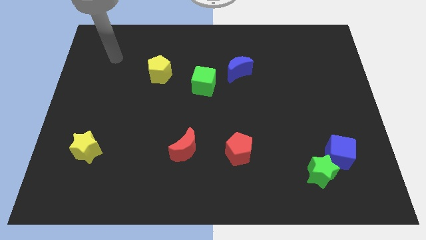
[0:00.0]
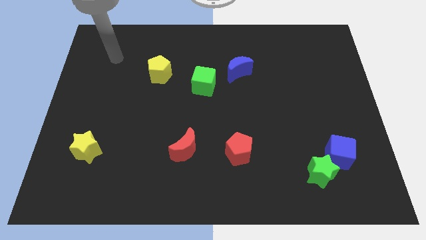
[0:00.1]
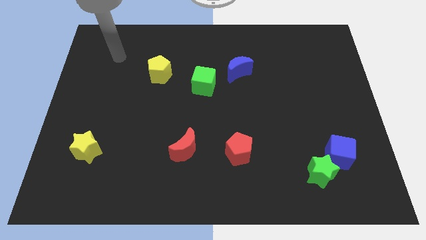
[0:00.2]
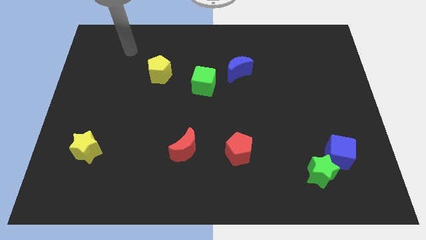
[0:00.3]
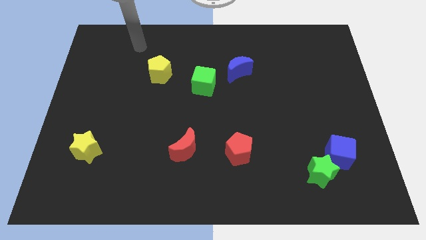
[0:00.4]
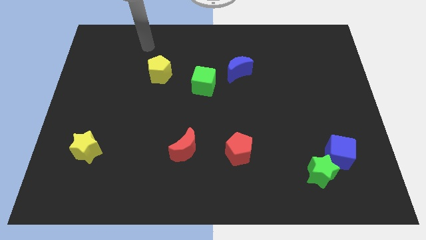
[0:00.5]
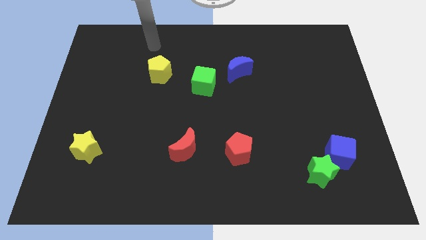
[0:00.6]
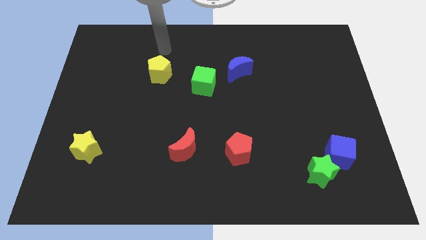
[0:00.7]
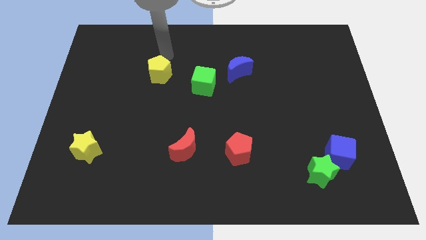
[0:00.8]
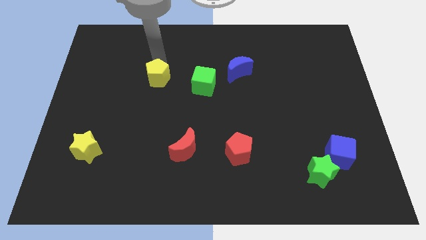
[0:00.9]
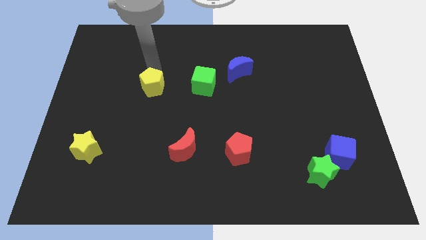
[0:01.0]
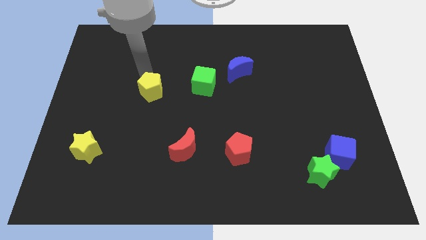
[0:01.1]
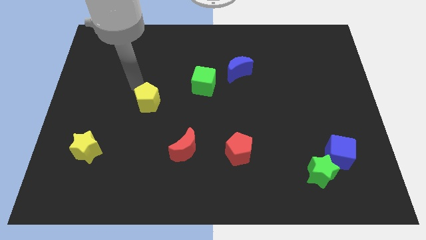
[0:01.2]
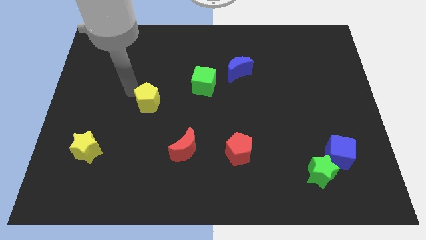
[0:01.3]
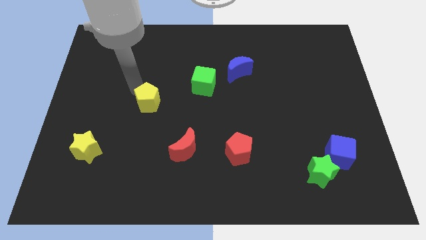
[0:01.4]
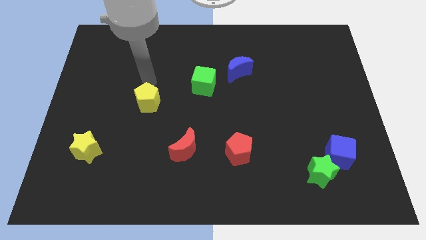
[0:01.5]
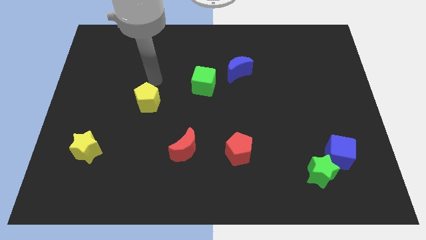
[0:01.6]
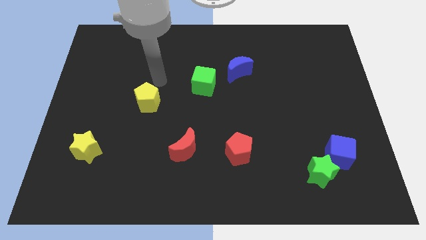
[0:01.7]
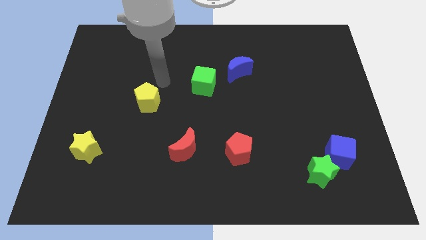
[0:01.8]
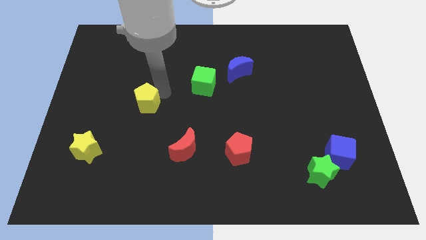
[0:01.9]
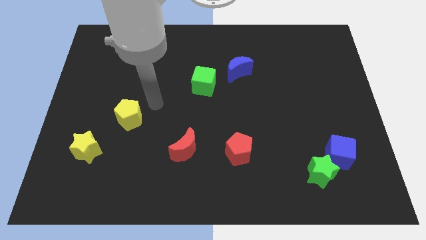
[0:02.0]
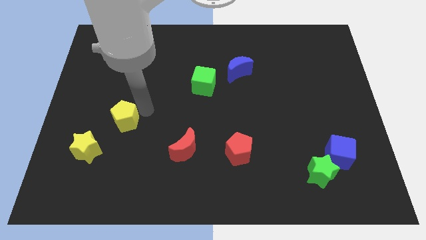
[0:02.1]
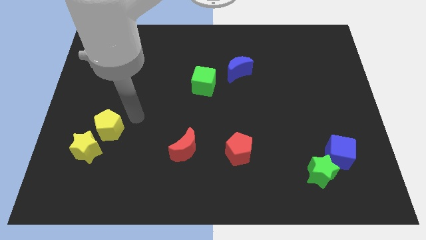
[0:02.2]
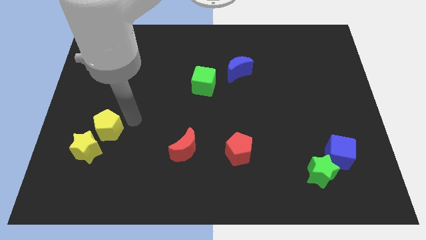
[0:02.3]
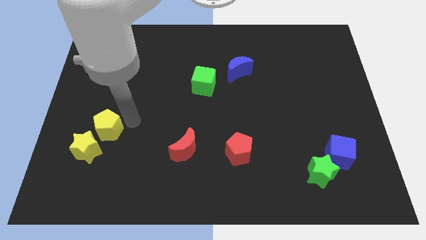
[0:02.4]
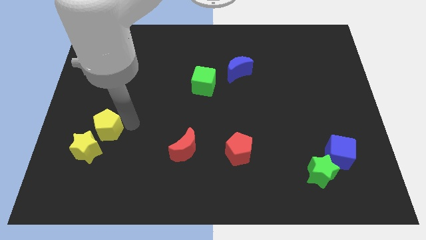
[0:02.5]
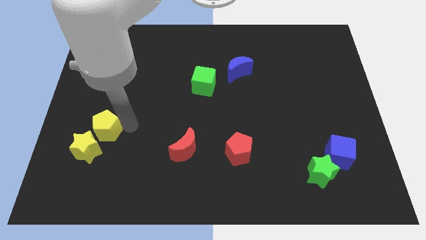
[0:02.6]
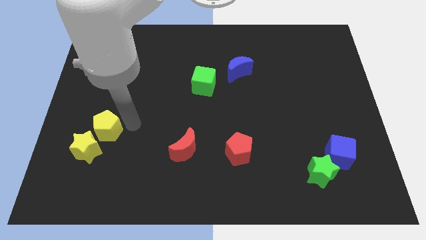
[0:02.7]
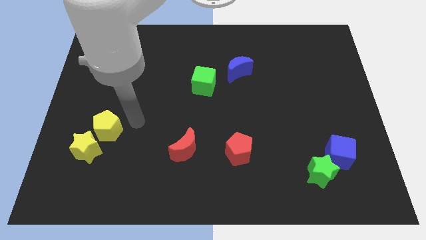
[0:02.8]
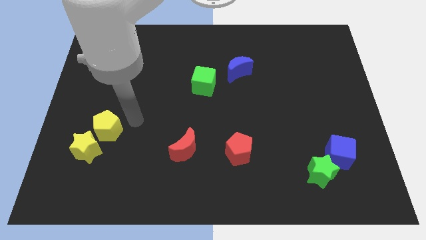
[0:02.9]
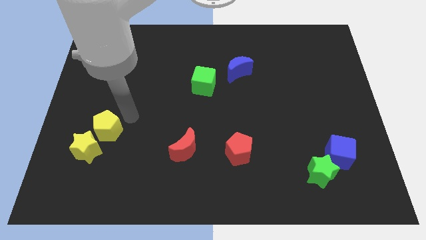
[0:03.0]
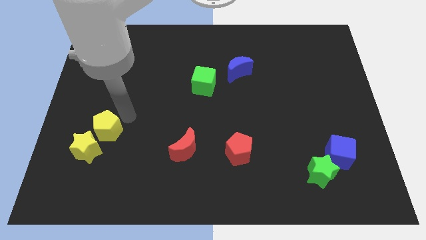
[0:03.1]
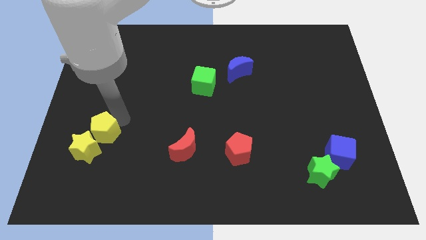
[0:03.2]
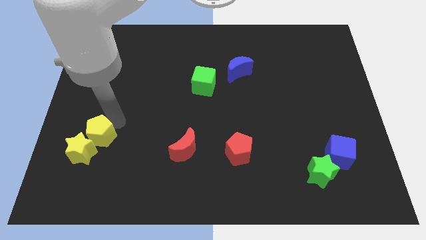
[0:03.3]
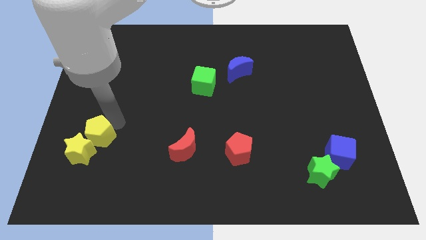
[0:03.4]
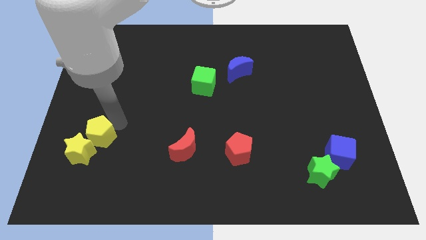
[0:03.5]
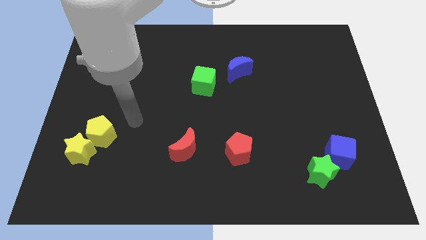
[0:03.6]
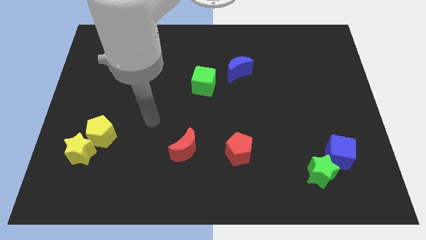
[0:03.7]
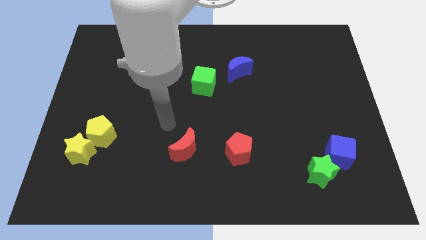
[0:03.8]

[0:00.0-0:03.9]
move the yellow pentagon into the yellow star

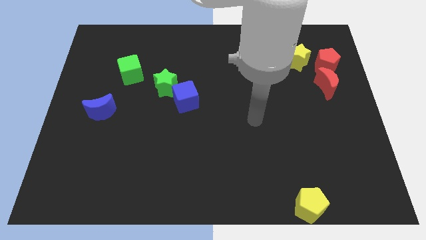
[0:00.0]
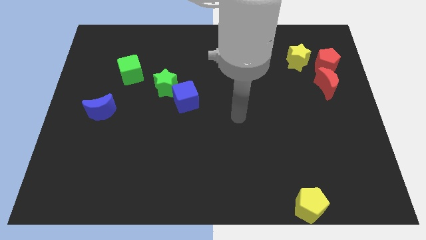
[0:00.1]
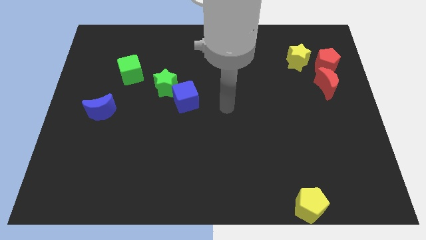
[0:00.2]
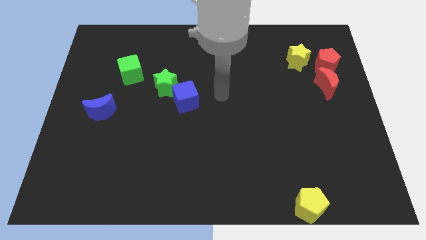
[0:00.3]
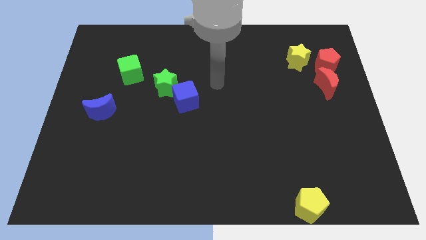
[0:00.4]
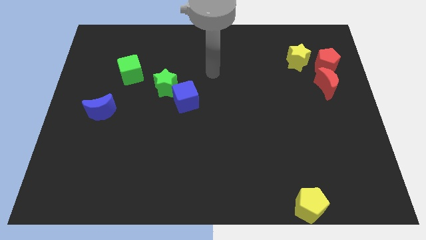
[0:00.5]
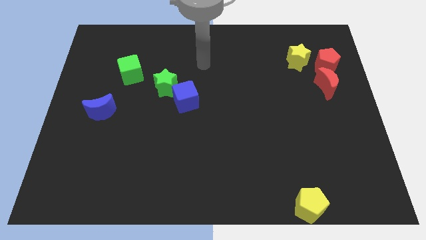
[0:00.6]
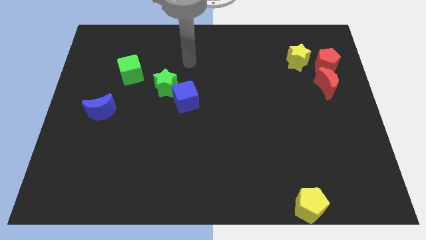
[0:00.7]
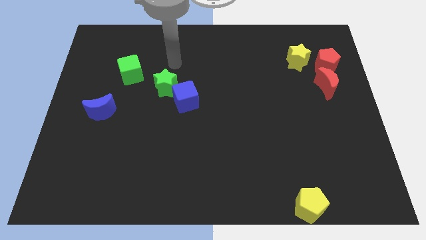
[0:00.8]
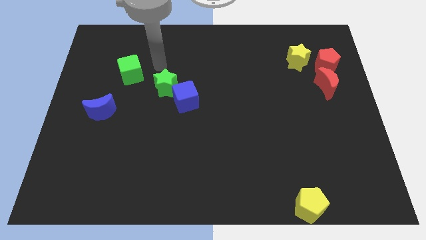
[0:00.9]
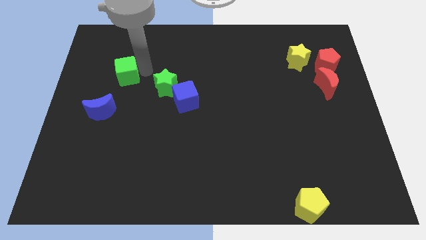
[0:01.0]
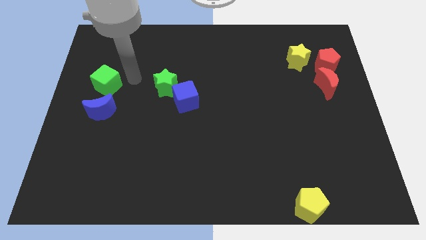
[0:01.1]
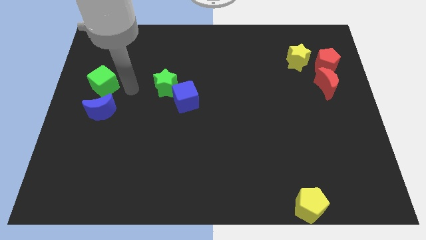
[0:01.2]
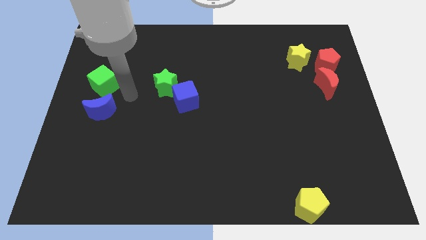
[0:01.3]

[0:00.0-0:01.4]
place the green cube vertically above the blue moon

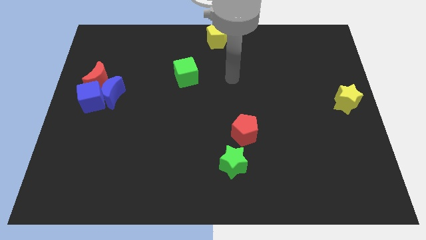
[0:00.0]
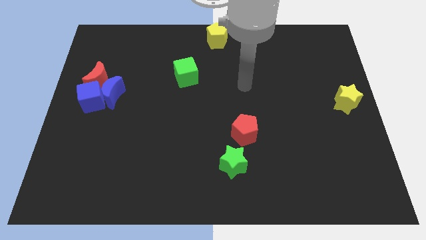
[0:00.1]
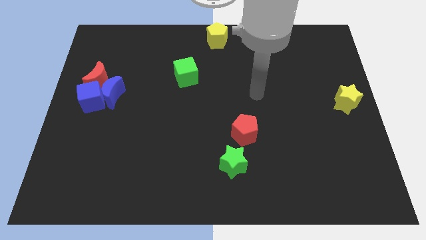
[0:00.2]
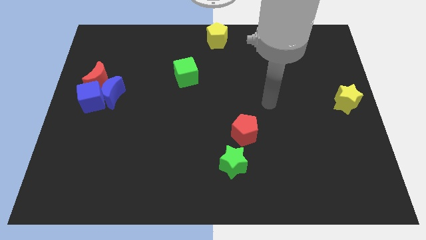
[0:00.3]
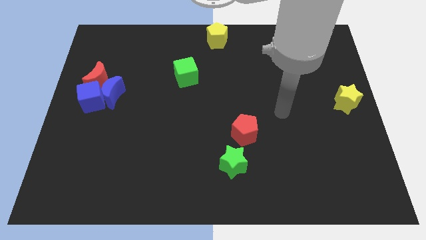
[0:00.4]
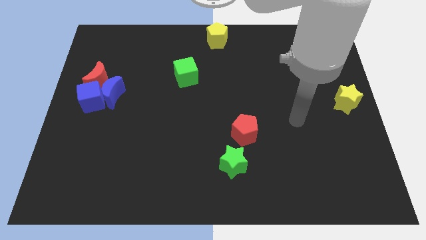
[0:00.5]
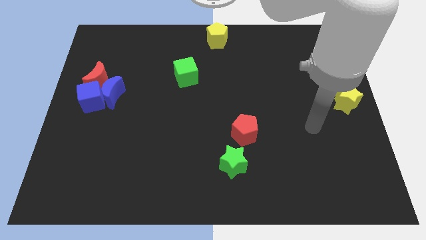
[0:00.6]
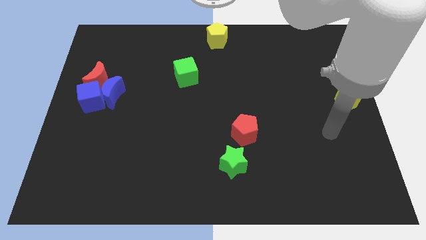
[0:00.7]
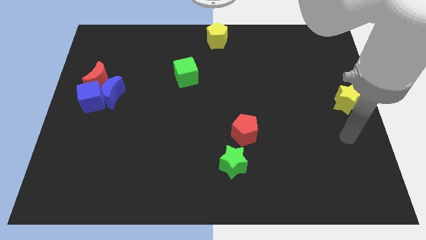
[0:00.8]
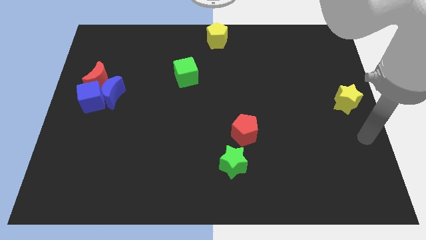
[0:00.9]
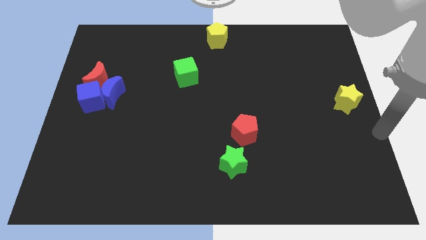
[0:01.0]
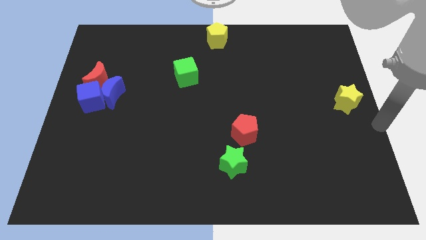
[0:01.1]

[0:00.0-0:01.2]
move your arm towards the center right side of the board

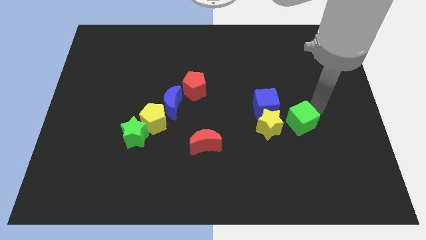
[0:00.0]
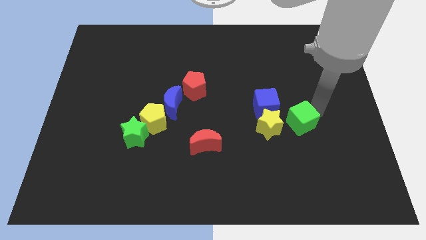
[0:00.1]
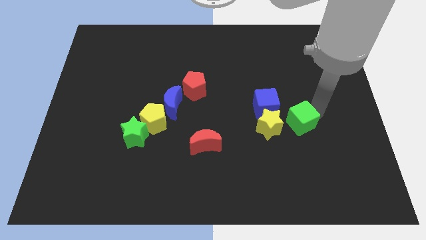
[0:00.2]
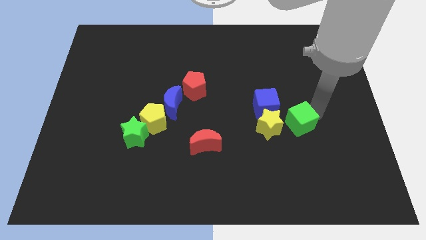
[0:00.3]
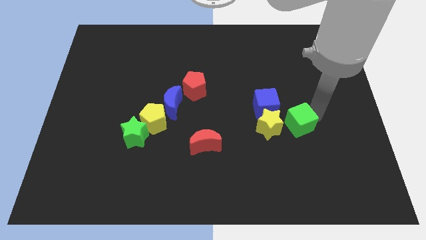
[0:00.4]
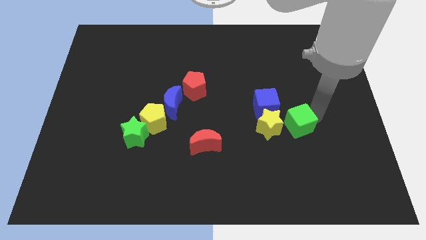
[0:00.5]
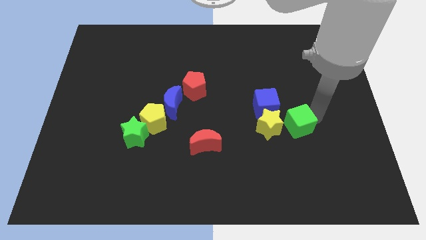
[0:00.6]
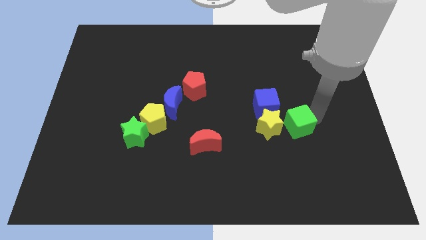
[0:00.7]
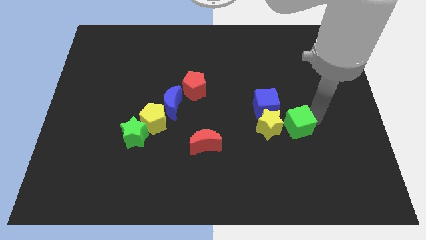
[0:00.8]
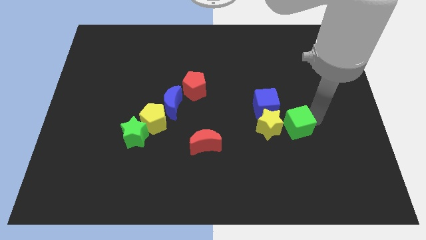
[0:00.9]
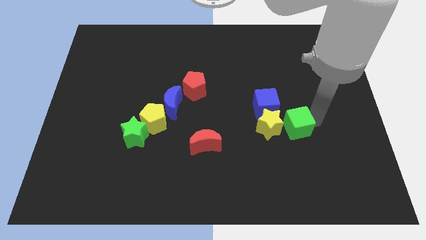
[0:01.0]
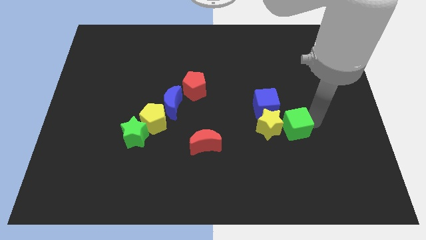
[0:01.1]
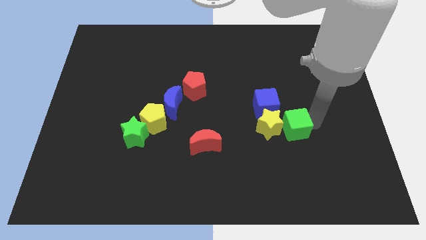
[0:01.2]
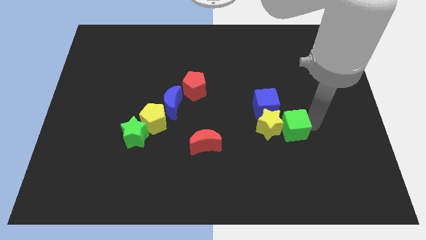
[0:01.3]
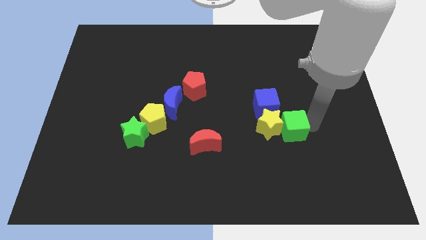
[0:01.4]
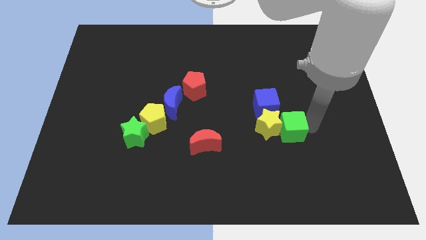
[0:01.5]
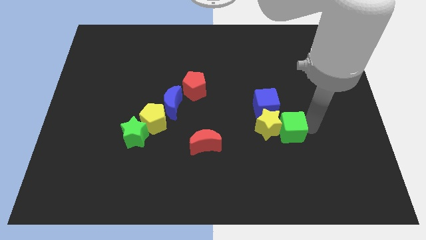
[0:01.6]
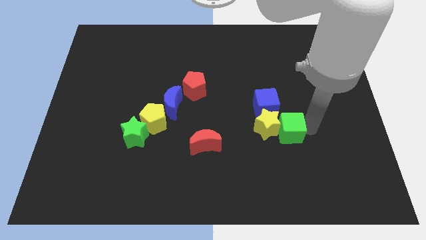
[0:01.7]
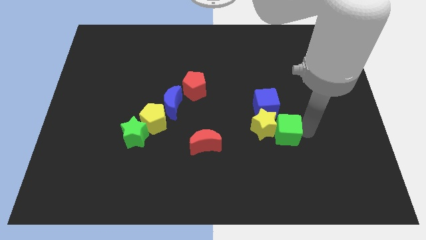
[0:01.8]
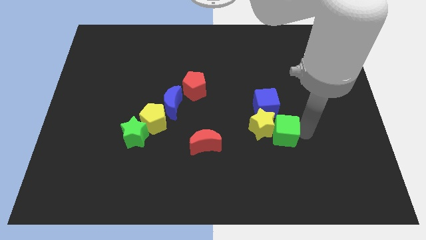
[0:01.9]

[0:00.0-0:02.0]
push the green cube into the yellow star

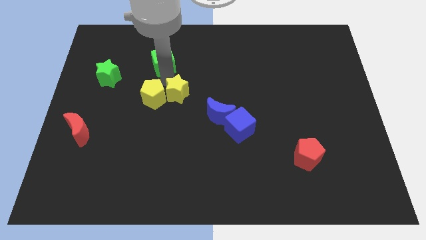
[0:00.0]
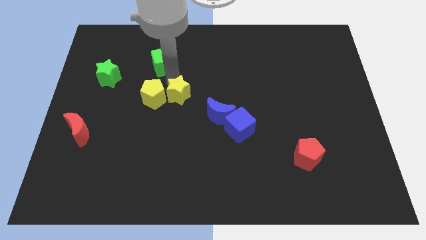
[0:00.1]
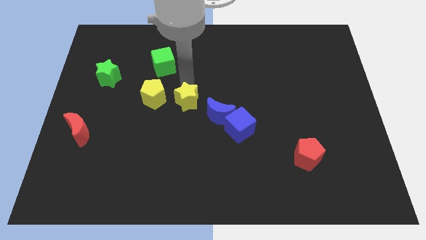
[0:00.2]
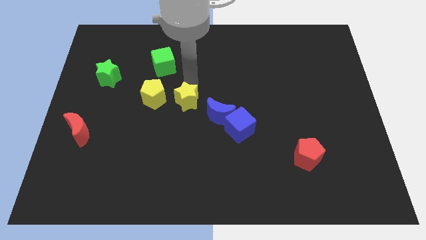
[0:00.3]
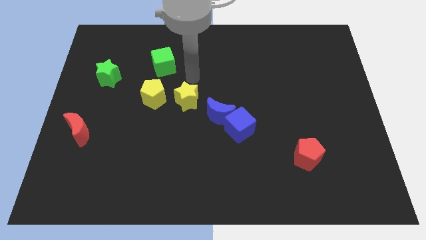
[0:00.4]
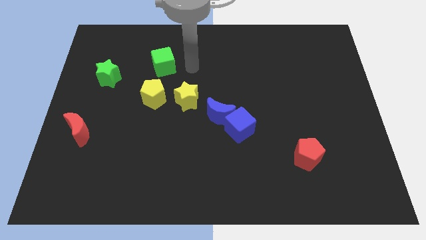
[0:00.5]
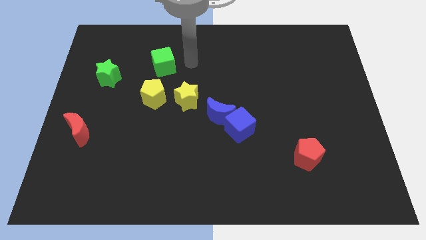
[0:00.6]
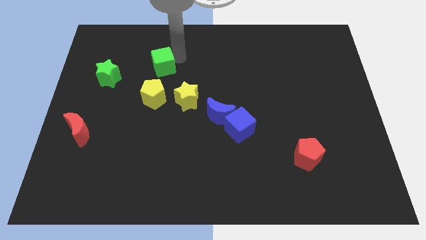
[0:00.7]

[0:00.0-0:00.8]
separate yellow star from the yellow pentagon
